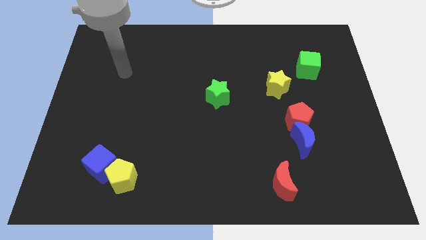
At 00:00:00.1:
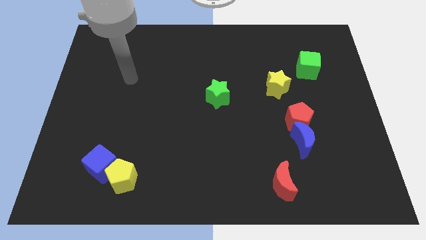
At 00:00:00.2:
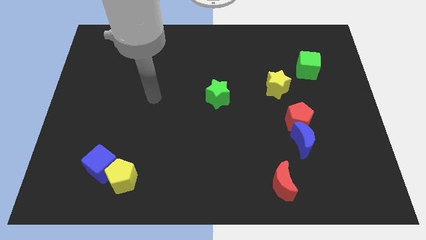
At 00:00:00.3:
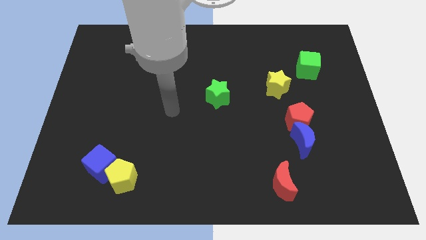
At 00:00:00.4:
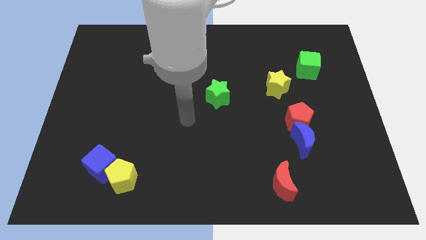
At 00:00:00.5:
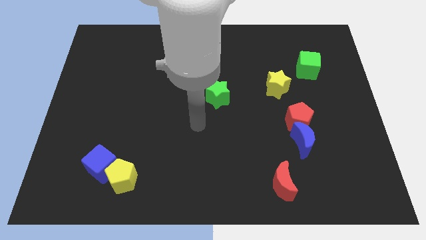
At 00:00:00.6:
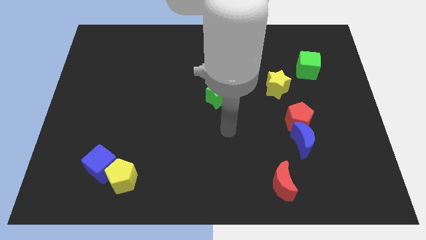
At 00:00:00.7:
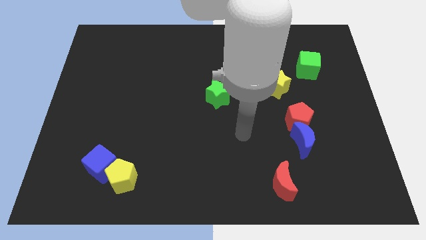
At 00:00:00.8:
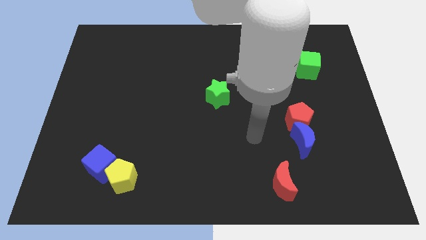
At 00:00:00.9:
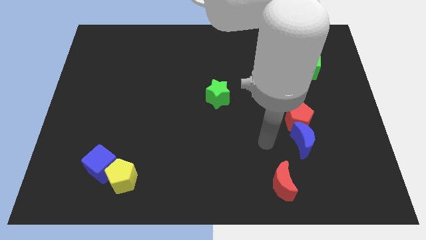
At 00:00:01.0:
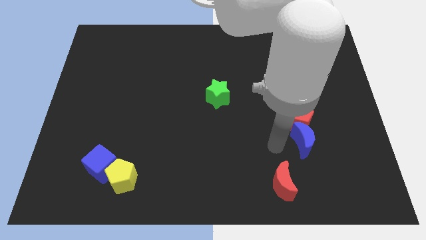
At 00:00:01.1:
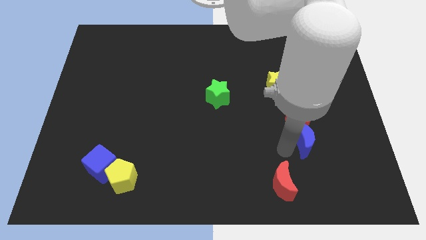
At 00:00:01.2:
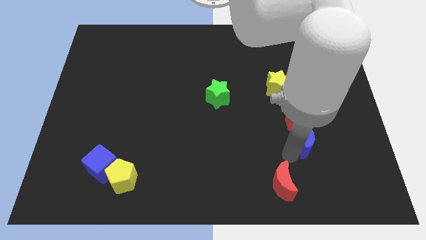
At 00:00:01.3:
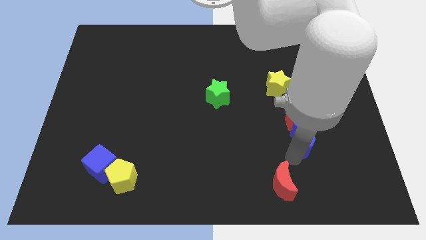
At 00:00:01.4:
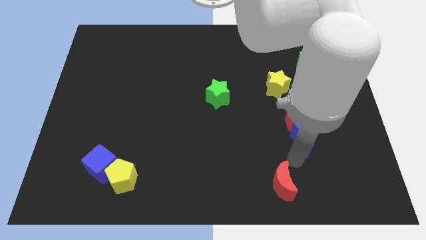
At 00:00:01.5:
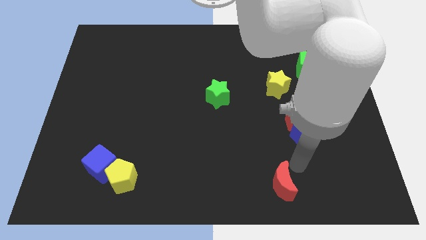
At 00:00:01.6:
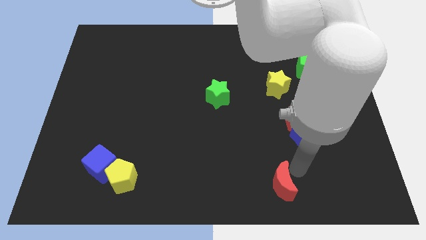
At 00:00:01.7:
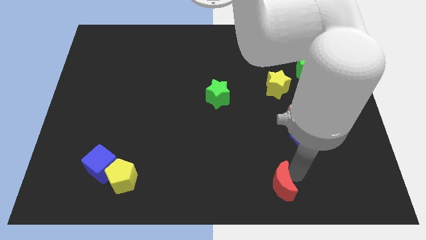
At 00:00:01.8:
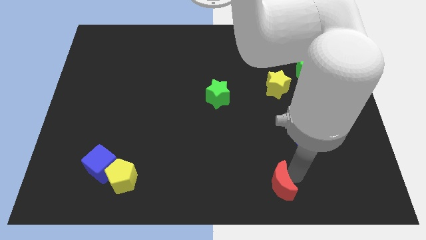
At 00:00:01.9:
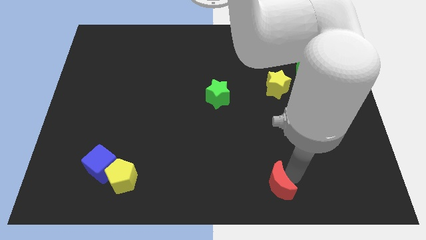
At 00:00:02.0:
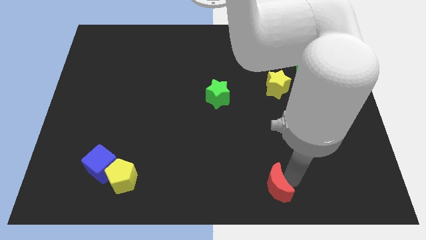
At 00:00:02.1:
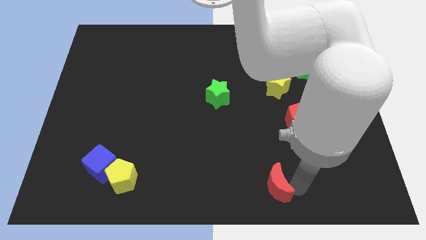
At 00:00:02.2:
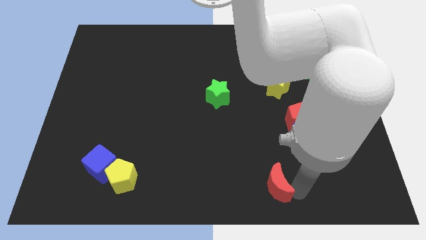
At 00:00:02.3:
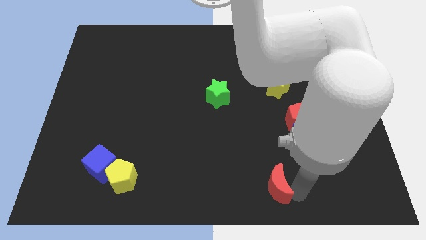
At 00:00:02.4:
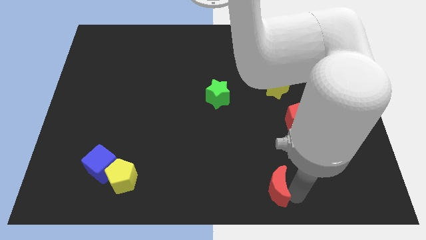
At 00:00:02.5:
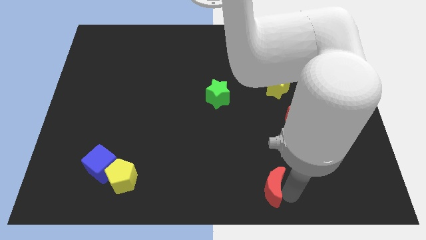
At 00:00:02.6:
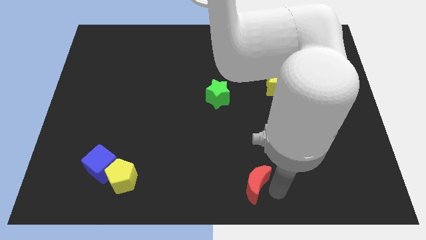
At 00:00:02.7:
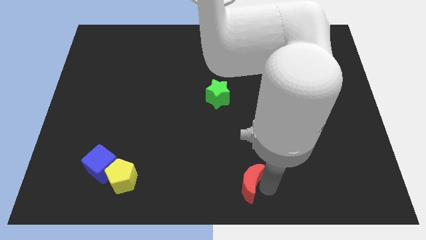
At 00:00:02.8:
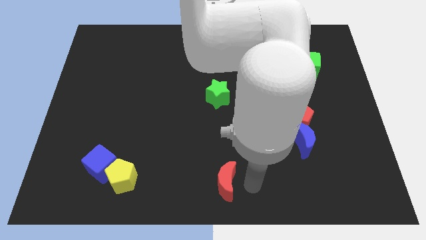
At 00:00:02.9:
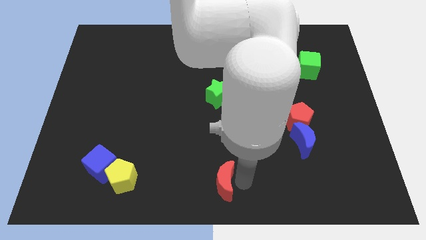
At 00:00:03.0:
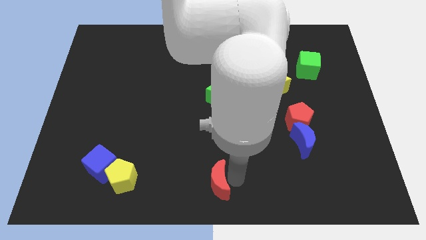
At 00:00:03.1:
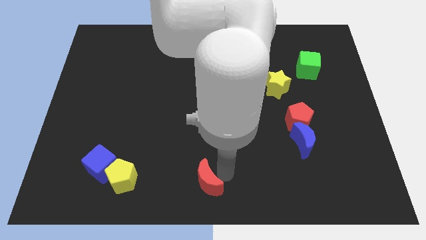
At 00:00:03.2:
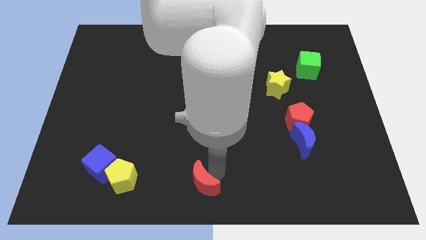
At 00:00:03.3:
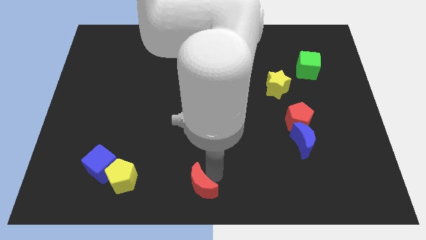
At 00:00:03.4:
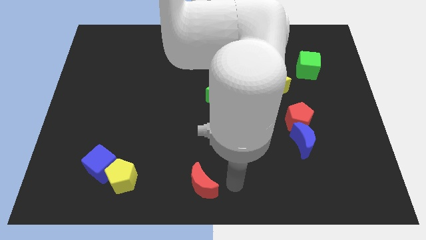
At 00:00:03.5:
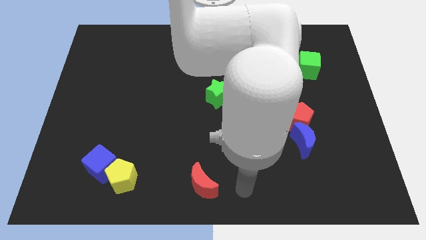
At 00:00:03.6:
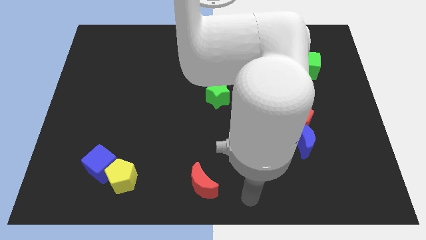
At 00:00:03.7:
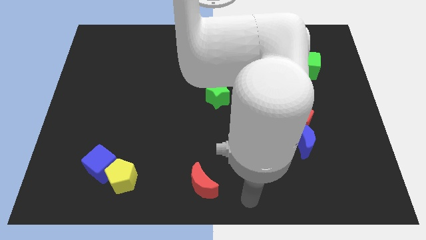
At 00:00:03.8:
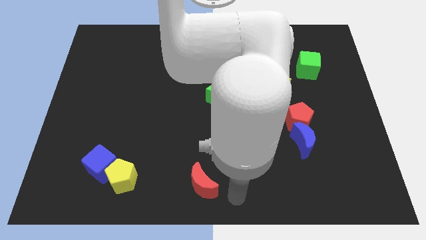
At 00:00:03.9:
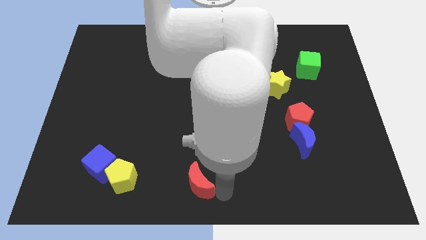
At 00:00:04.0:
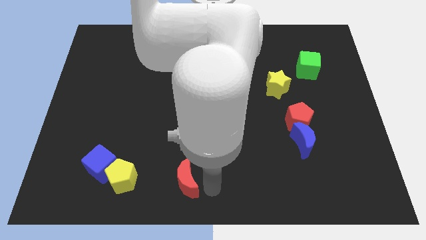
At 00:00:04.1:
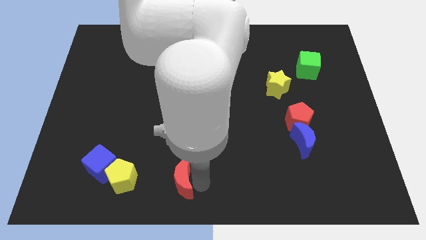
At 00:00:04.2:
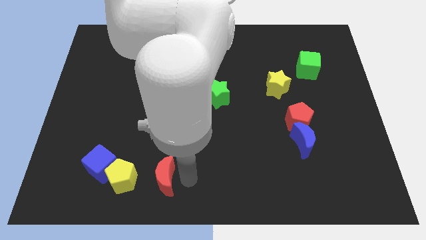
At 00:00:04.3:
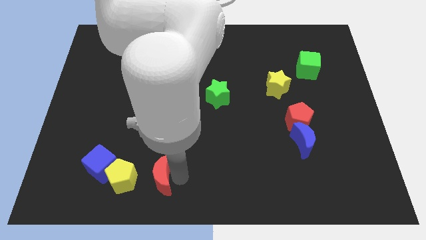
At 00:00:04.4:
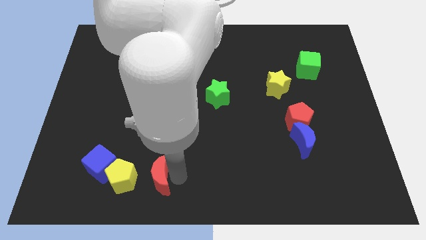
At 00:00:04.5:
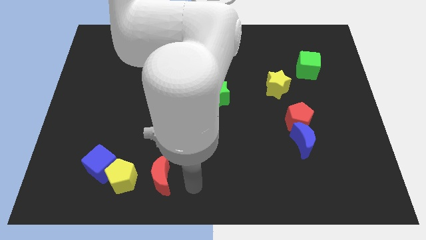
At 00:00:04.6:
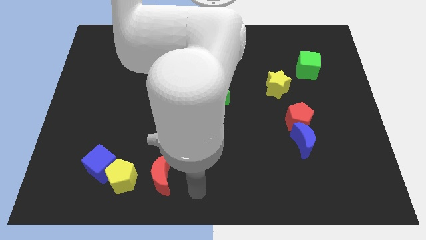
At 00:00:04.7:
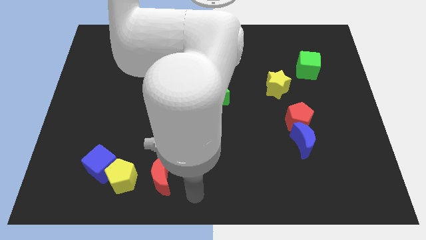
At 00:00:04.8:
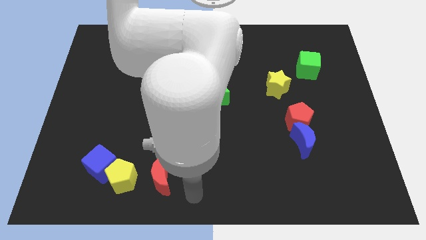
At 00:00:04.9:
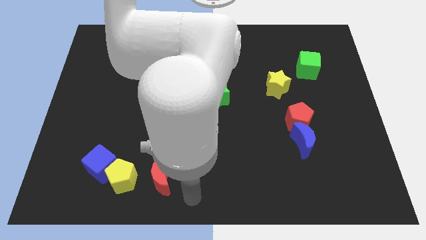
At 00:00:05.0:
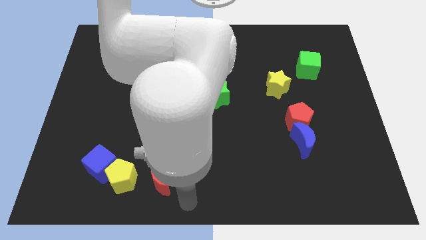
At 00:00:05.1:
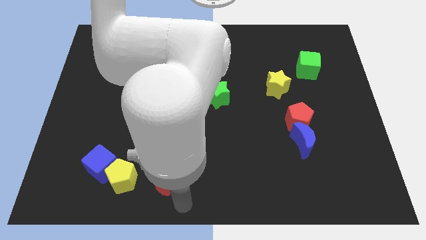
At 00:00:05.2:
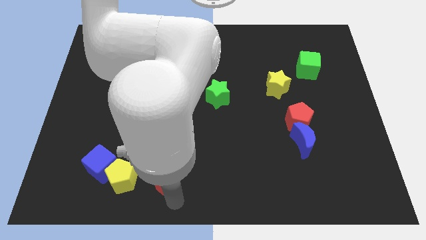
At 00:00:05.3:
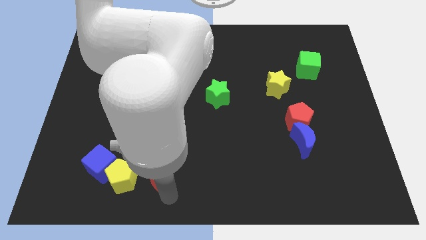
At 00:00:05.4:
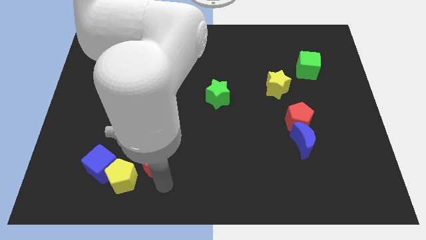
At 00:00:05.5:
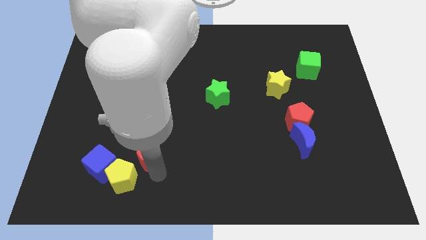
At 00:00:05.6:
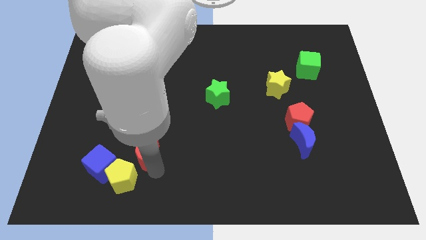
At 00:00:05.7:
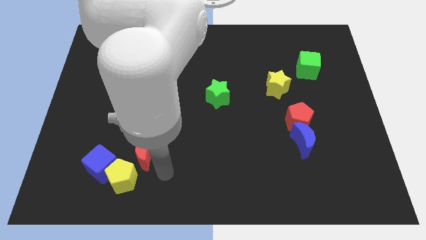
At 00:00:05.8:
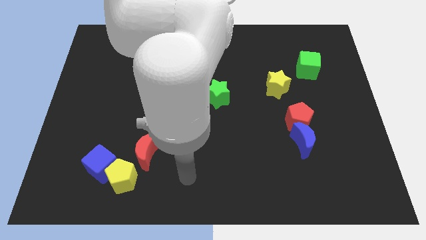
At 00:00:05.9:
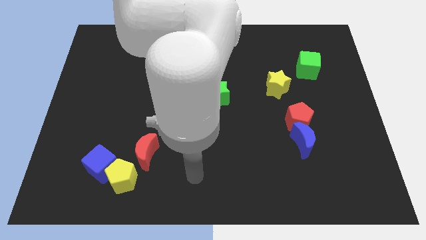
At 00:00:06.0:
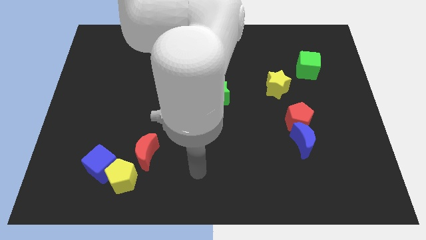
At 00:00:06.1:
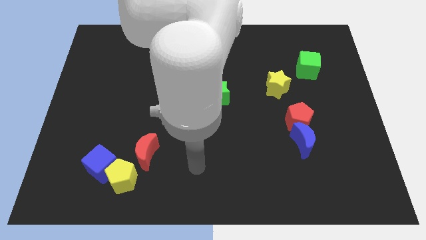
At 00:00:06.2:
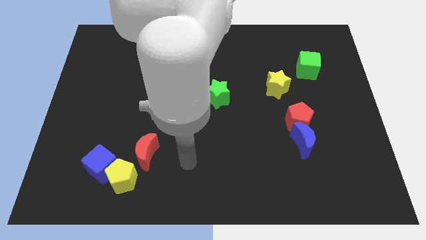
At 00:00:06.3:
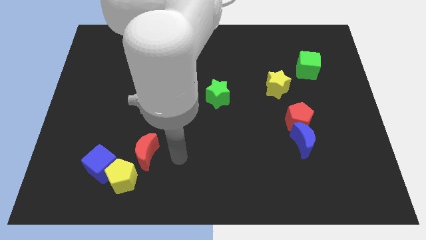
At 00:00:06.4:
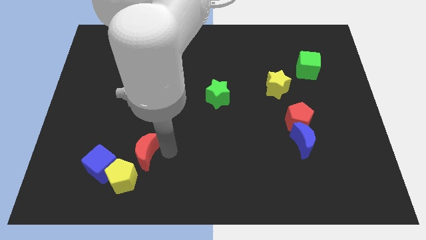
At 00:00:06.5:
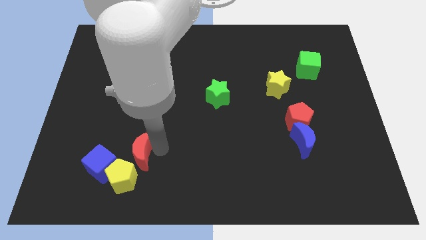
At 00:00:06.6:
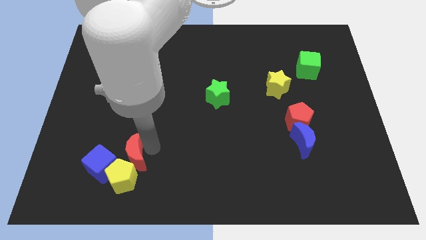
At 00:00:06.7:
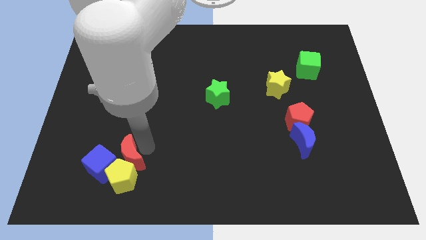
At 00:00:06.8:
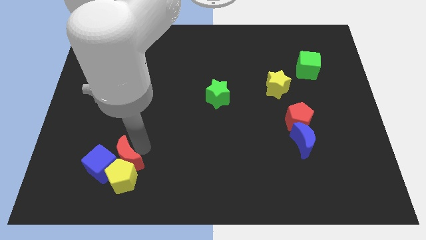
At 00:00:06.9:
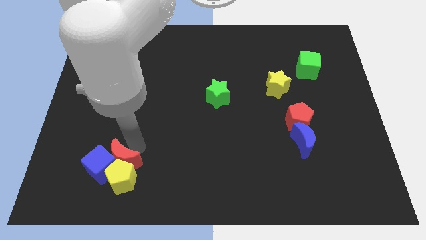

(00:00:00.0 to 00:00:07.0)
slide the red moon towards the blue cube

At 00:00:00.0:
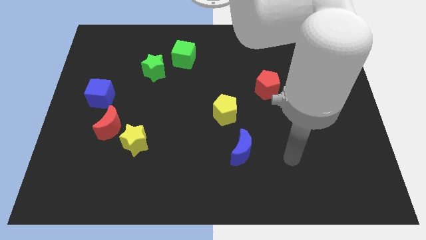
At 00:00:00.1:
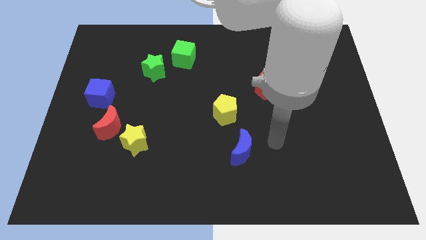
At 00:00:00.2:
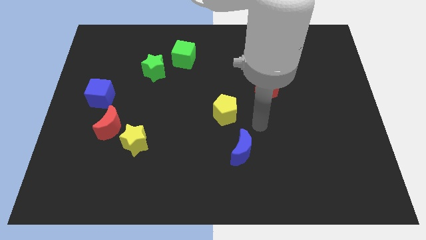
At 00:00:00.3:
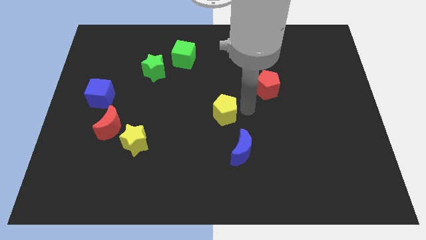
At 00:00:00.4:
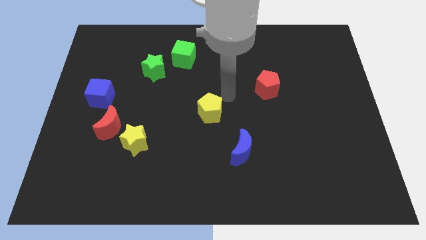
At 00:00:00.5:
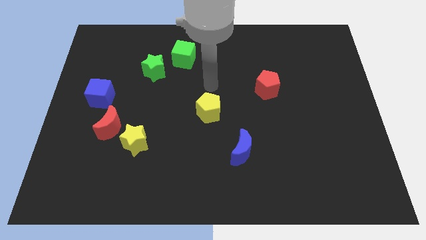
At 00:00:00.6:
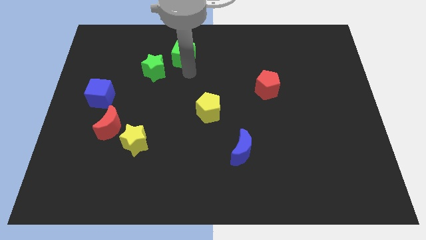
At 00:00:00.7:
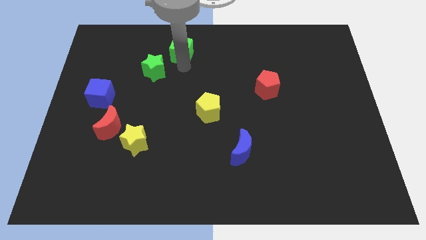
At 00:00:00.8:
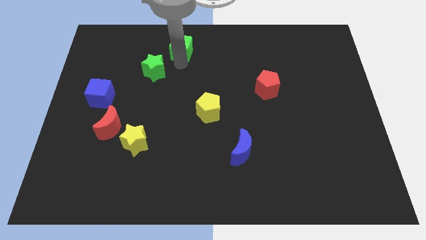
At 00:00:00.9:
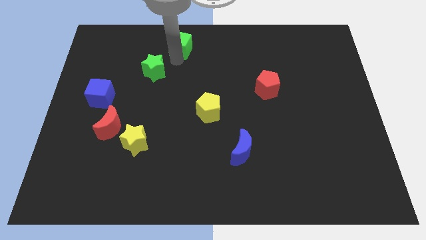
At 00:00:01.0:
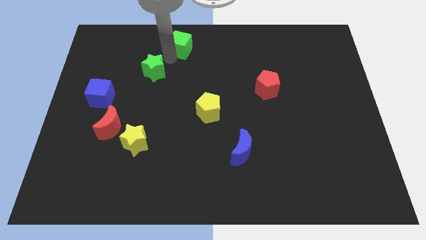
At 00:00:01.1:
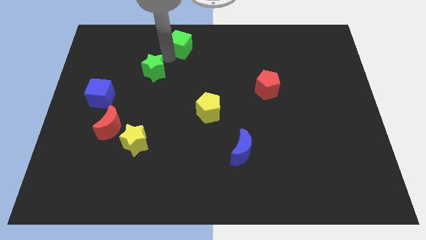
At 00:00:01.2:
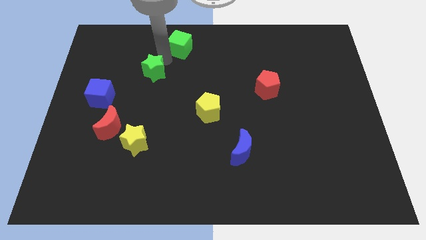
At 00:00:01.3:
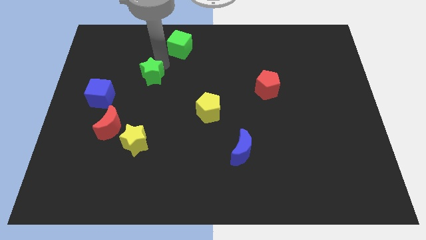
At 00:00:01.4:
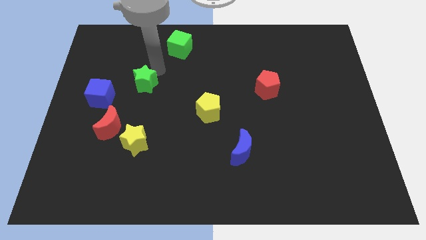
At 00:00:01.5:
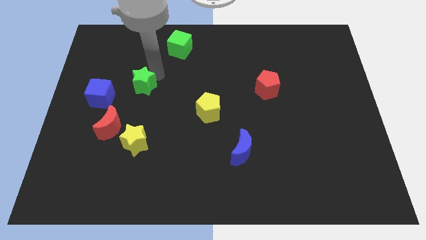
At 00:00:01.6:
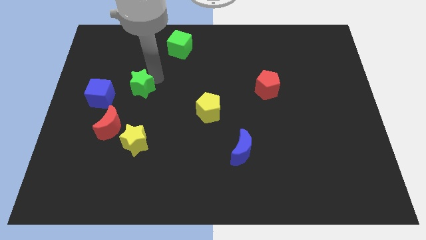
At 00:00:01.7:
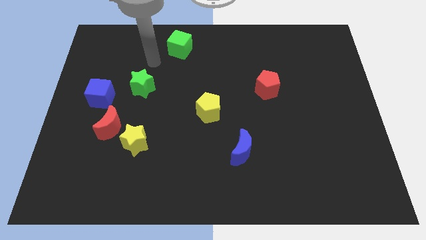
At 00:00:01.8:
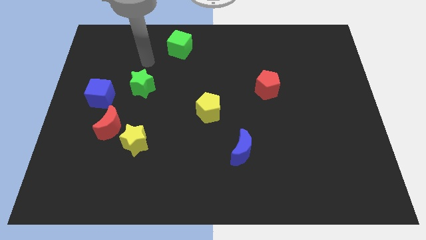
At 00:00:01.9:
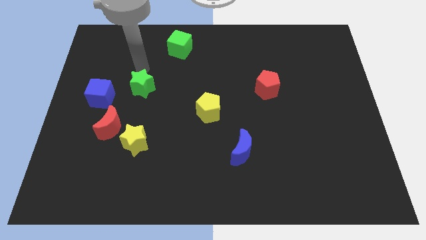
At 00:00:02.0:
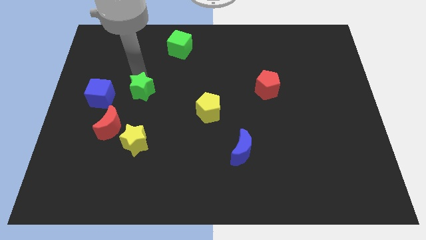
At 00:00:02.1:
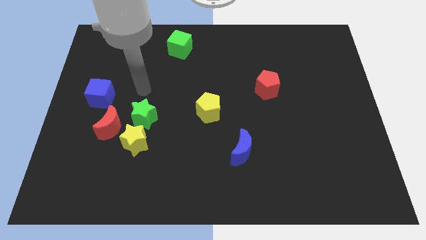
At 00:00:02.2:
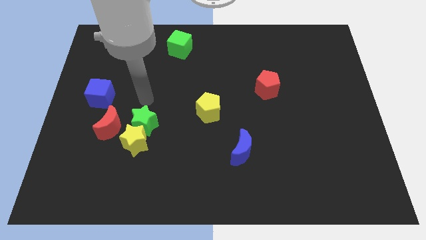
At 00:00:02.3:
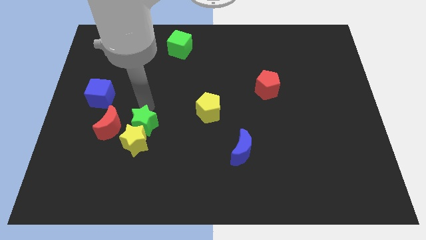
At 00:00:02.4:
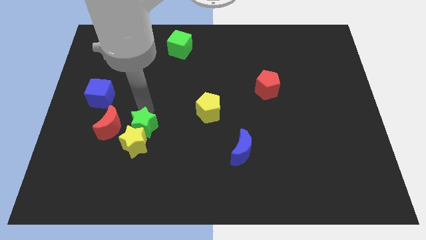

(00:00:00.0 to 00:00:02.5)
move the green star to the yellow star
